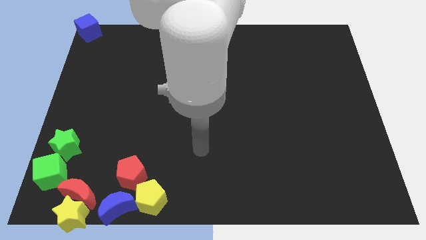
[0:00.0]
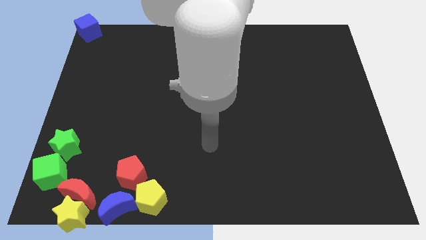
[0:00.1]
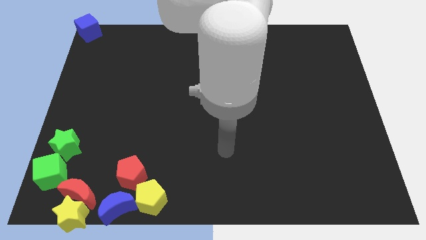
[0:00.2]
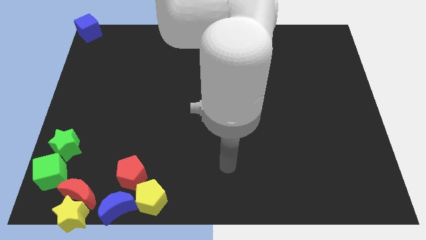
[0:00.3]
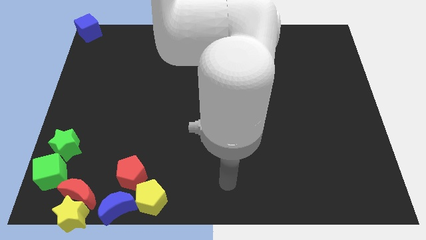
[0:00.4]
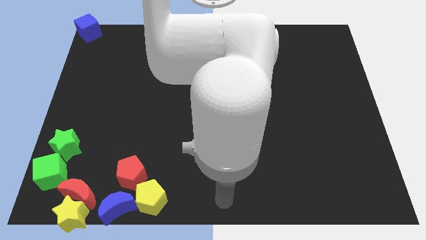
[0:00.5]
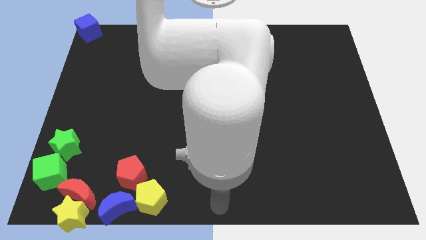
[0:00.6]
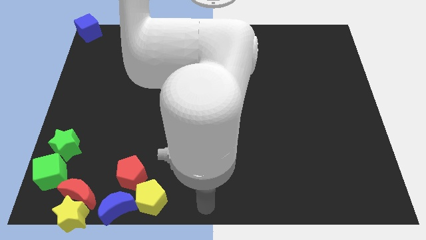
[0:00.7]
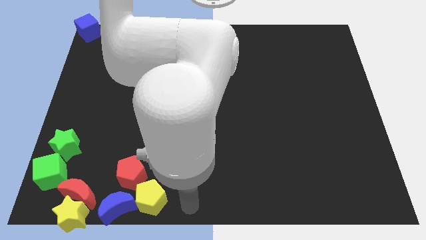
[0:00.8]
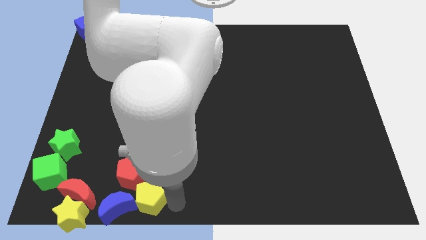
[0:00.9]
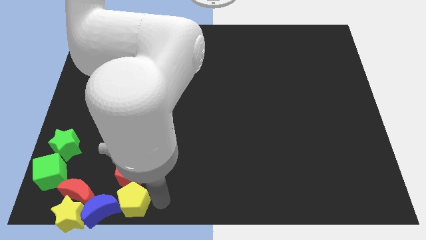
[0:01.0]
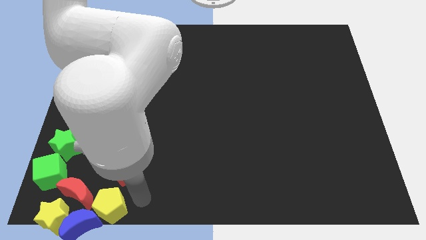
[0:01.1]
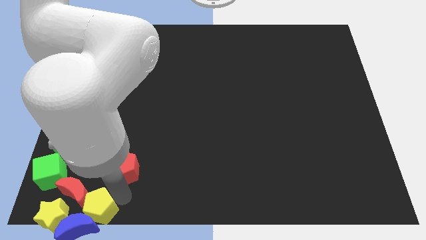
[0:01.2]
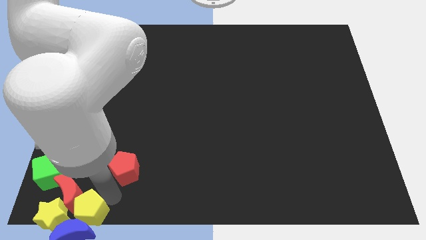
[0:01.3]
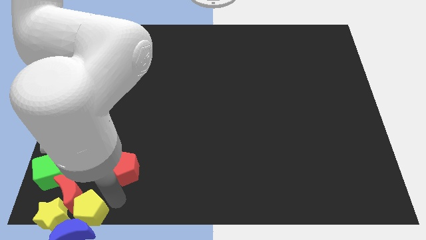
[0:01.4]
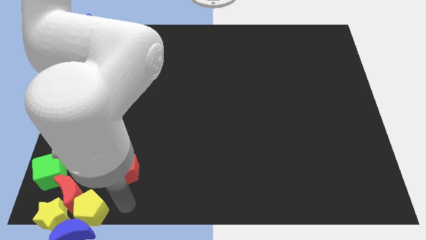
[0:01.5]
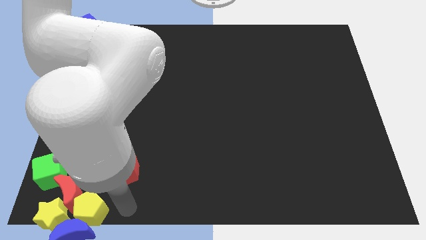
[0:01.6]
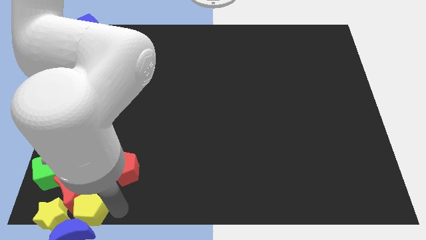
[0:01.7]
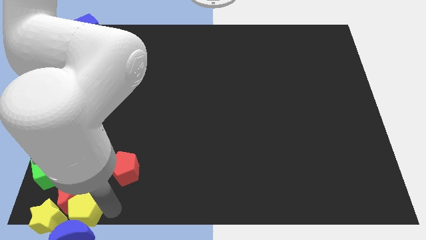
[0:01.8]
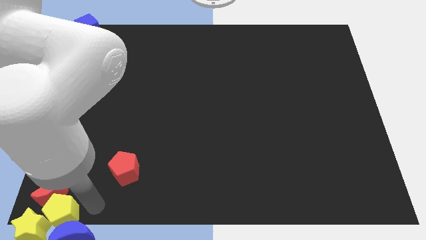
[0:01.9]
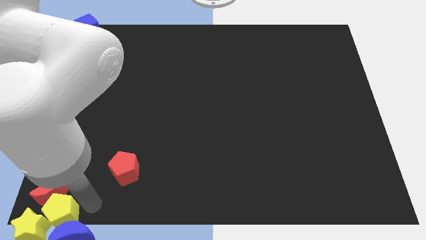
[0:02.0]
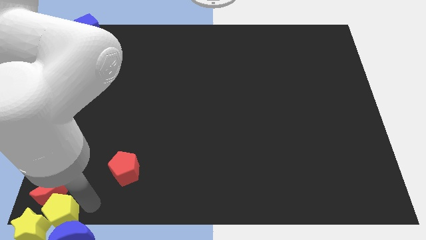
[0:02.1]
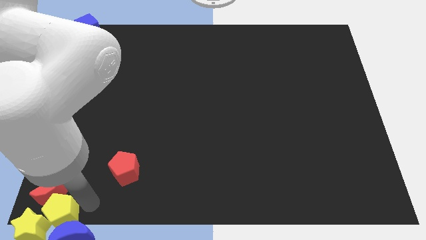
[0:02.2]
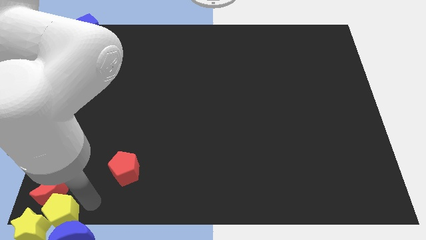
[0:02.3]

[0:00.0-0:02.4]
move the group of blocks towards the bottom left corner of the board

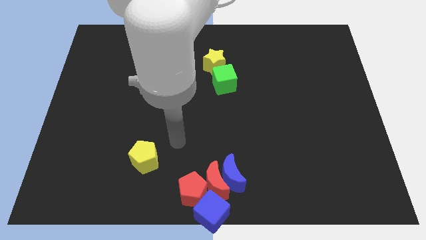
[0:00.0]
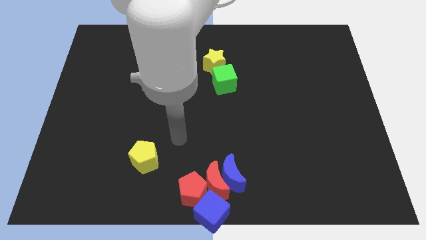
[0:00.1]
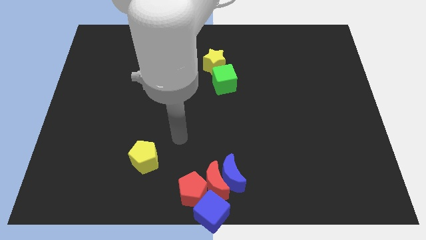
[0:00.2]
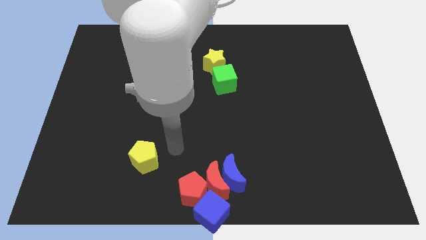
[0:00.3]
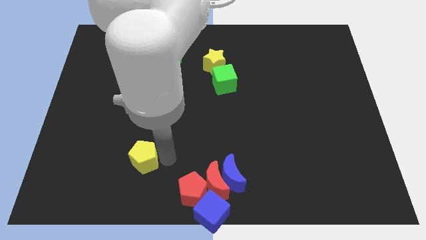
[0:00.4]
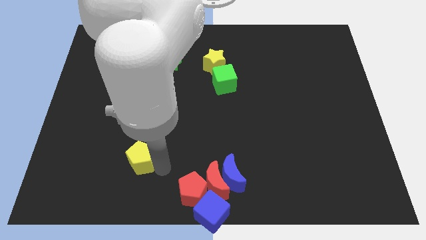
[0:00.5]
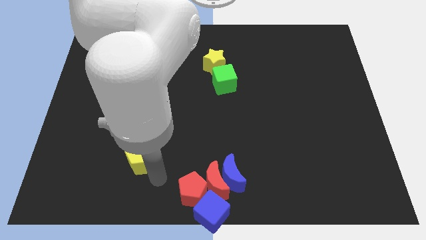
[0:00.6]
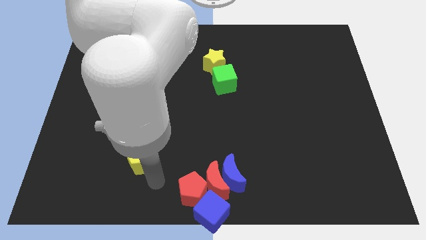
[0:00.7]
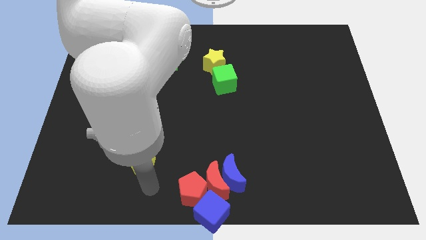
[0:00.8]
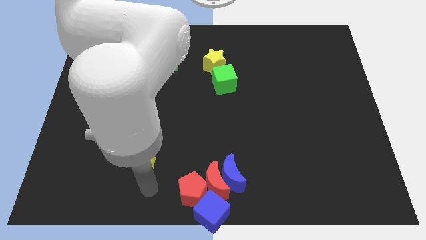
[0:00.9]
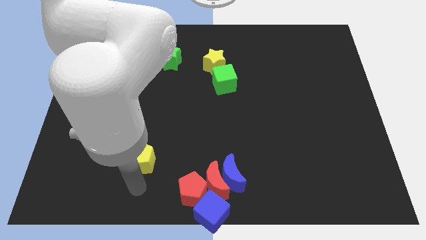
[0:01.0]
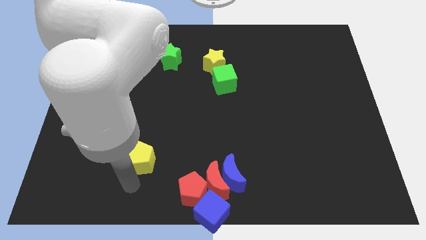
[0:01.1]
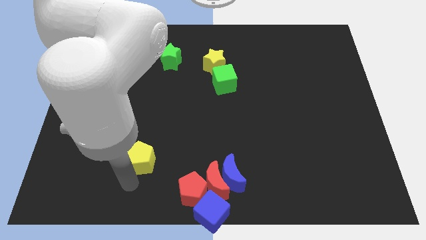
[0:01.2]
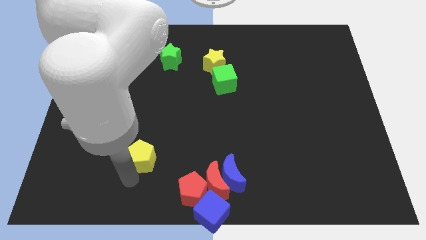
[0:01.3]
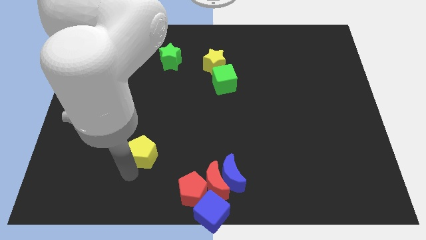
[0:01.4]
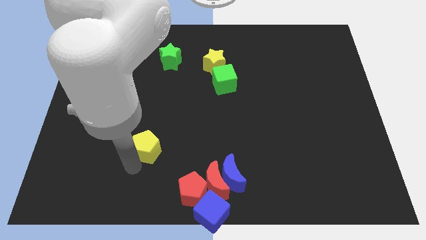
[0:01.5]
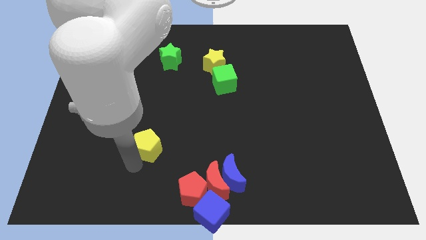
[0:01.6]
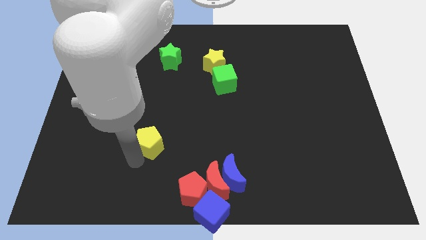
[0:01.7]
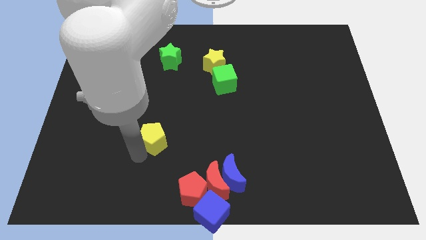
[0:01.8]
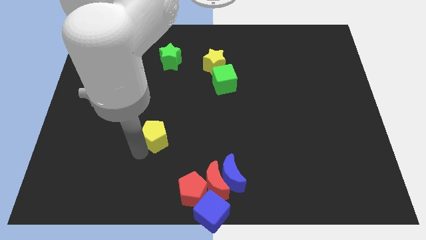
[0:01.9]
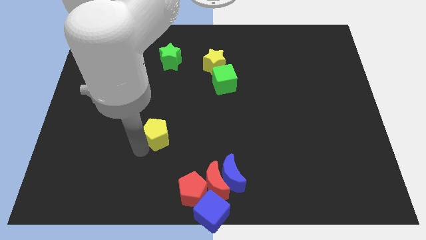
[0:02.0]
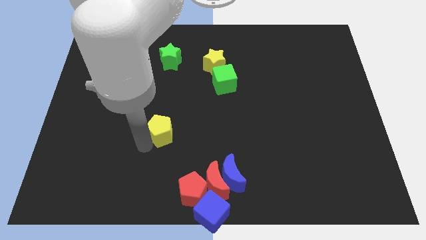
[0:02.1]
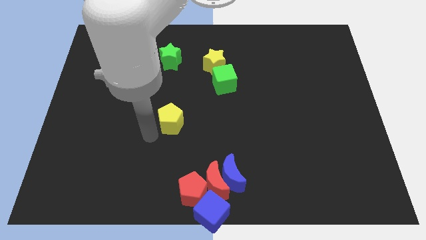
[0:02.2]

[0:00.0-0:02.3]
push the yellow pentagon vertically to the green star

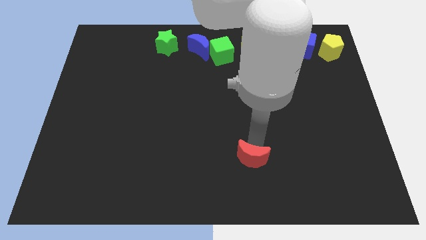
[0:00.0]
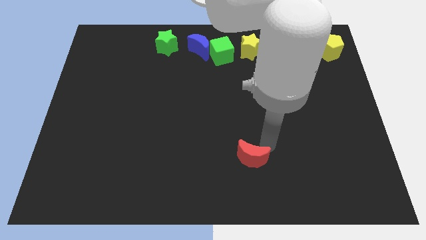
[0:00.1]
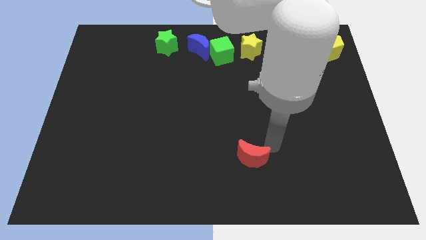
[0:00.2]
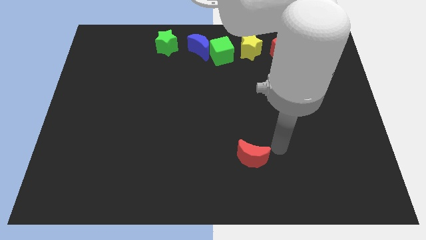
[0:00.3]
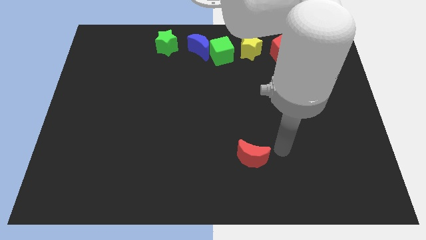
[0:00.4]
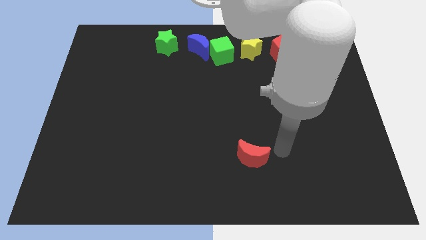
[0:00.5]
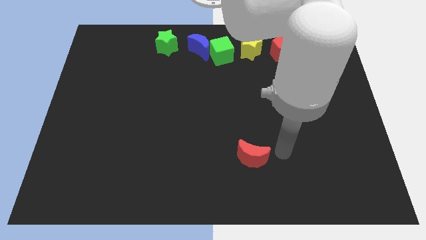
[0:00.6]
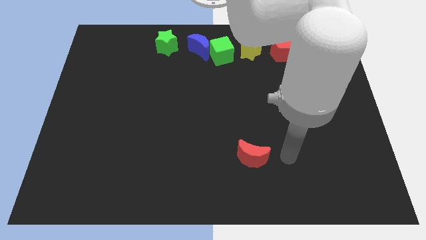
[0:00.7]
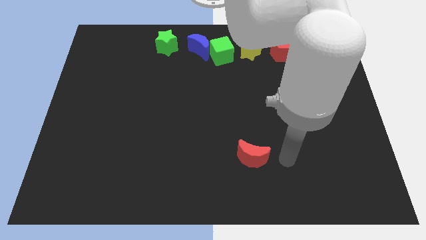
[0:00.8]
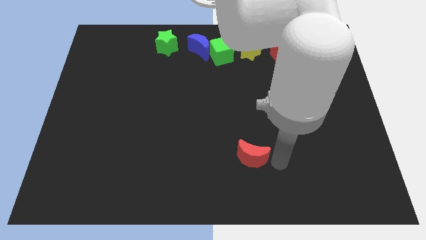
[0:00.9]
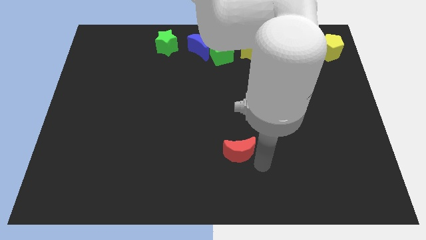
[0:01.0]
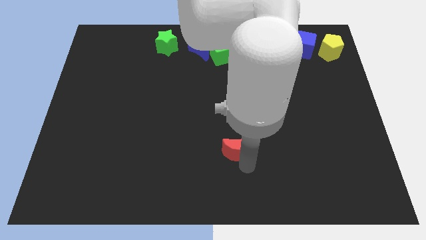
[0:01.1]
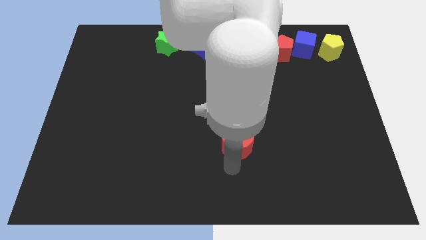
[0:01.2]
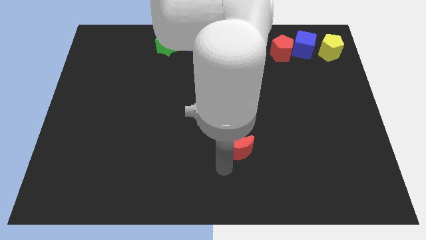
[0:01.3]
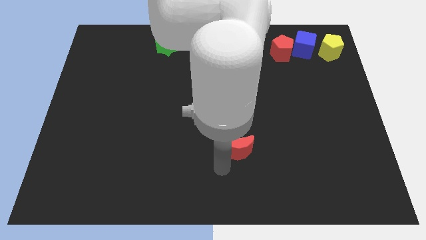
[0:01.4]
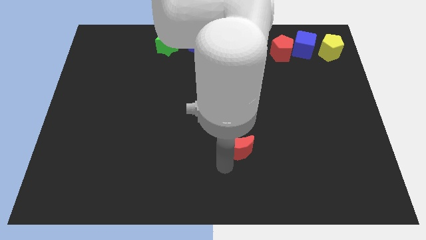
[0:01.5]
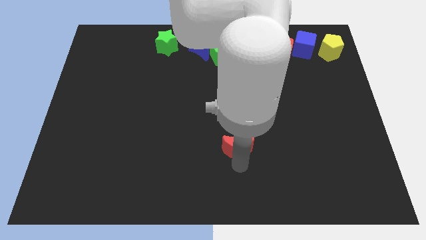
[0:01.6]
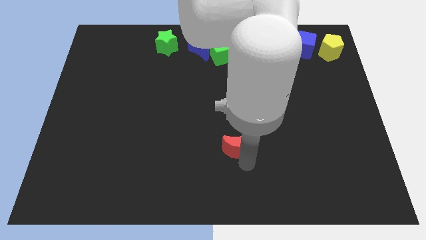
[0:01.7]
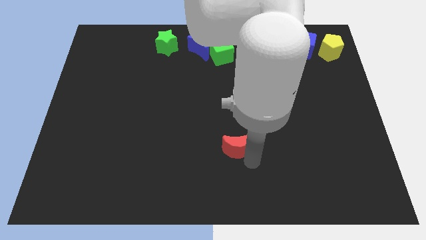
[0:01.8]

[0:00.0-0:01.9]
place the red moon vertically below the green cube

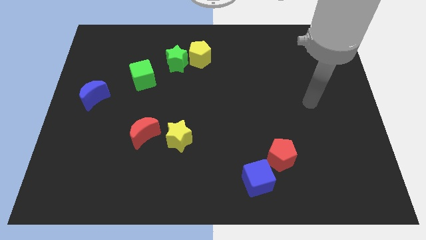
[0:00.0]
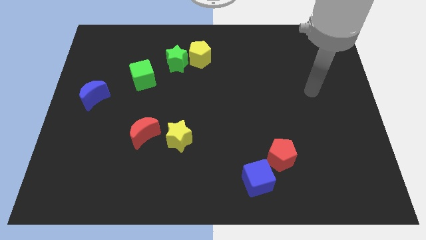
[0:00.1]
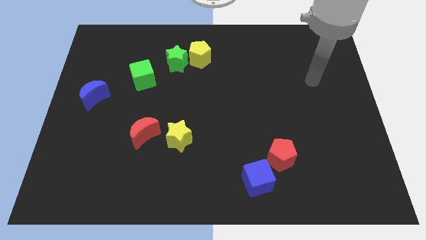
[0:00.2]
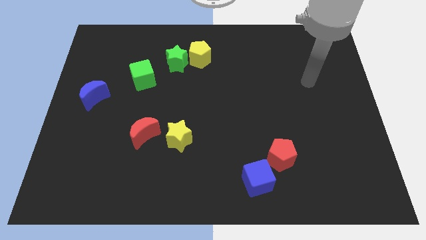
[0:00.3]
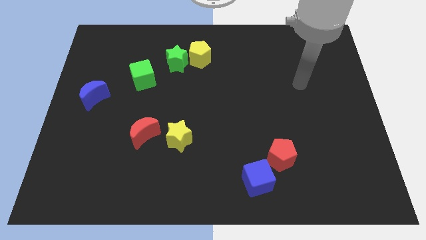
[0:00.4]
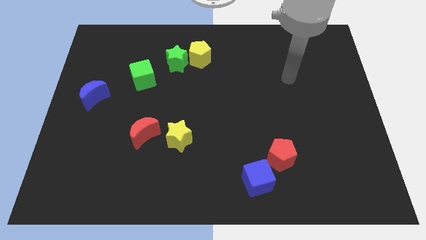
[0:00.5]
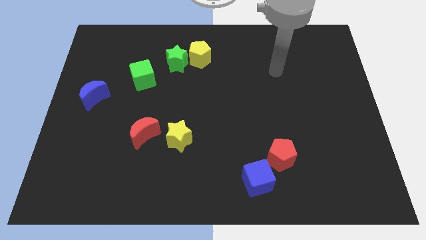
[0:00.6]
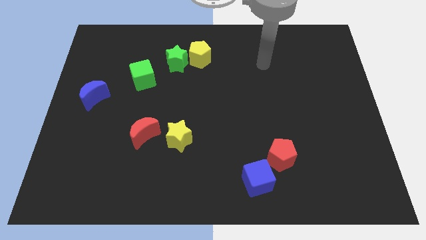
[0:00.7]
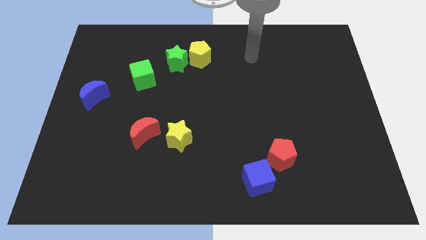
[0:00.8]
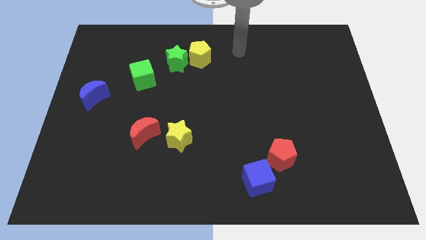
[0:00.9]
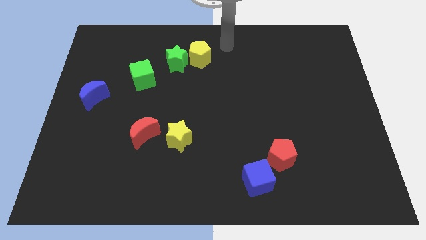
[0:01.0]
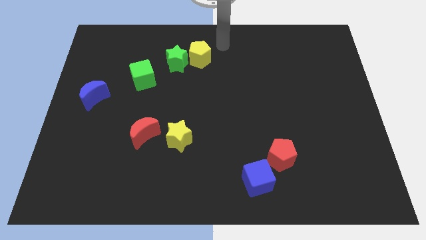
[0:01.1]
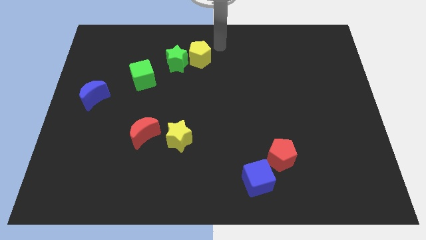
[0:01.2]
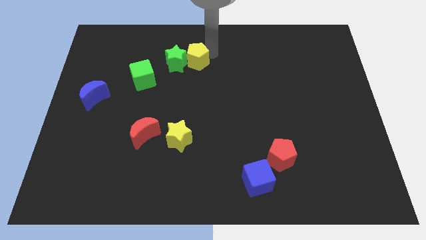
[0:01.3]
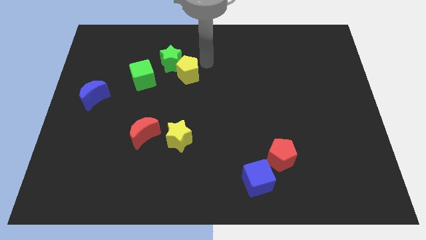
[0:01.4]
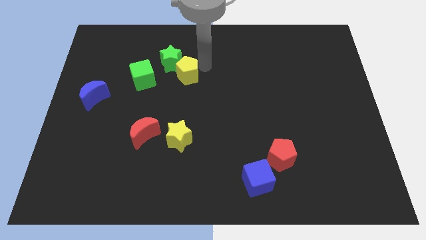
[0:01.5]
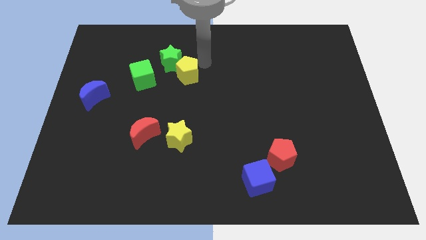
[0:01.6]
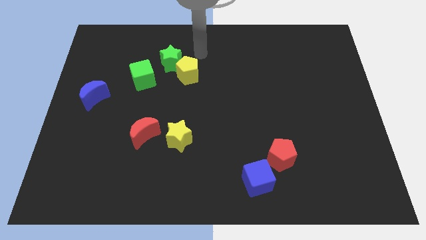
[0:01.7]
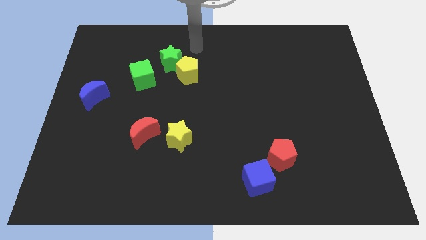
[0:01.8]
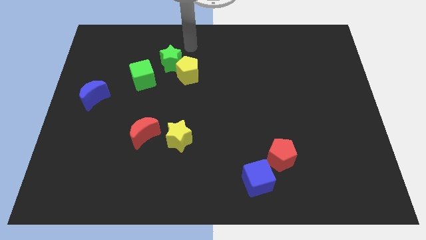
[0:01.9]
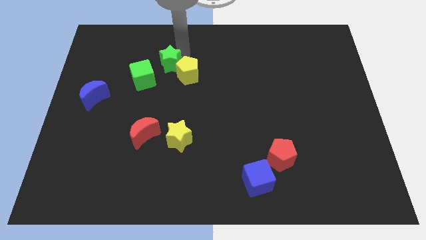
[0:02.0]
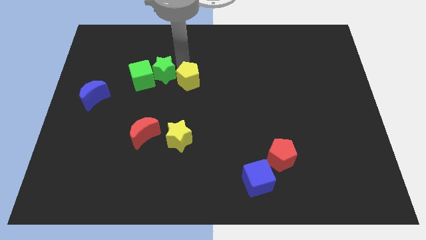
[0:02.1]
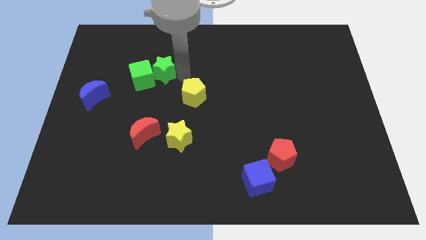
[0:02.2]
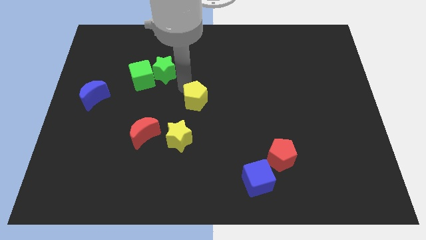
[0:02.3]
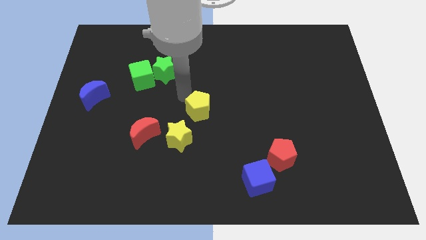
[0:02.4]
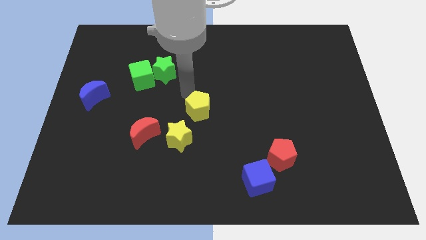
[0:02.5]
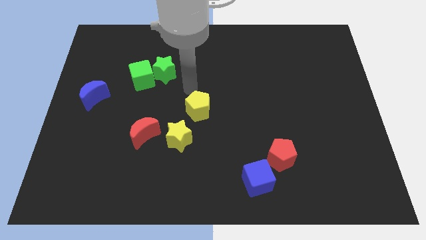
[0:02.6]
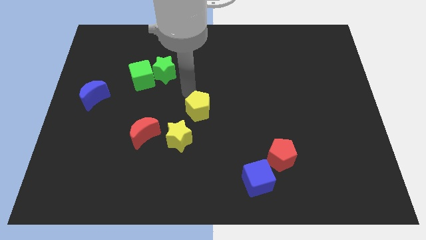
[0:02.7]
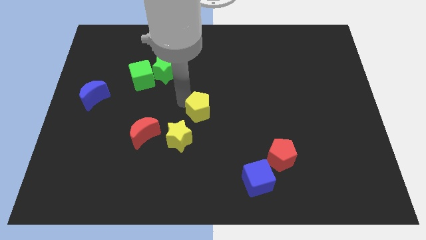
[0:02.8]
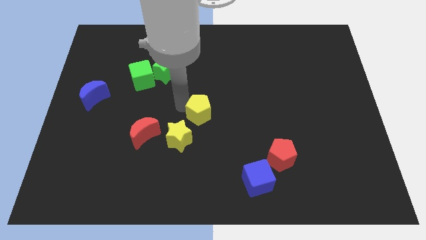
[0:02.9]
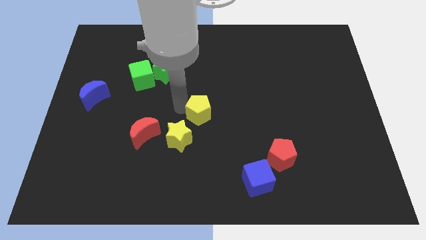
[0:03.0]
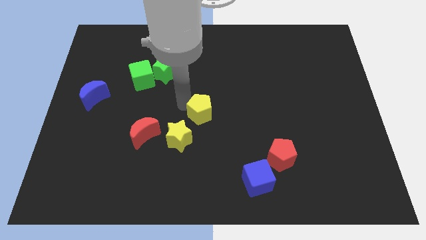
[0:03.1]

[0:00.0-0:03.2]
move the yellow pentagon close to the yellow star
